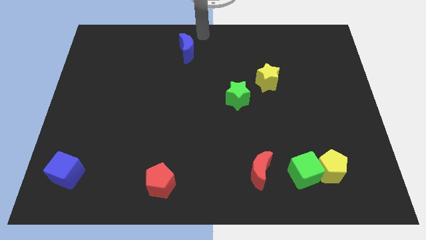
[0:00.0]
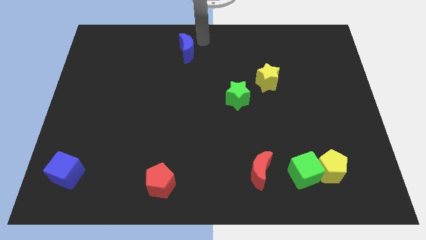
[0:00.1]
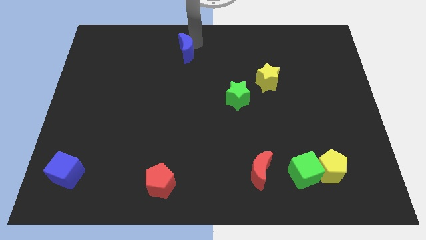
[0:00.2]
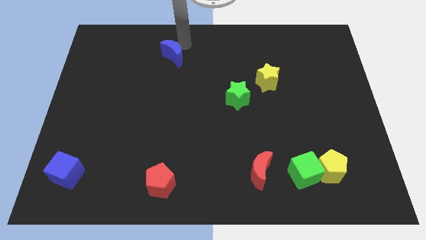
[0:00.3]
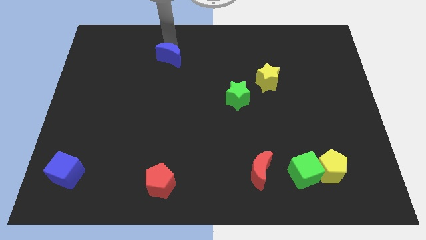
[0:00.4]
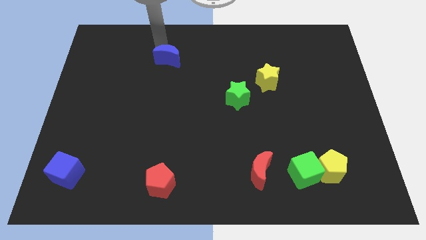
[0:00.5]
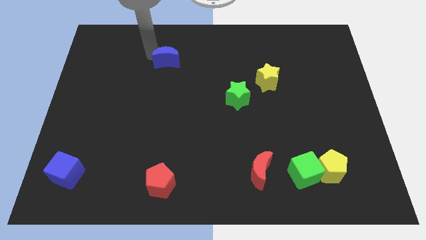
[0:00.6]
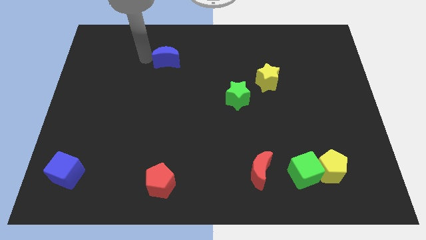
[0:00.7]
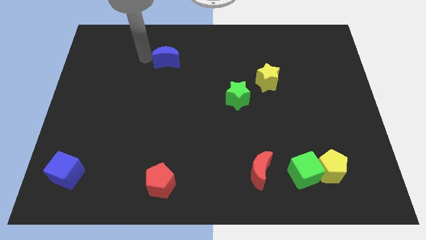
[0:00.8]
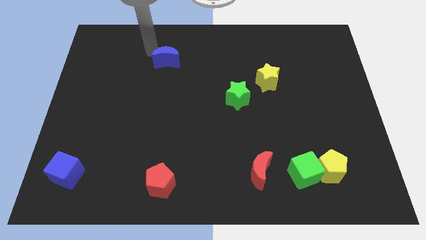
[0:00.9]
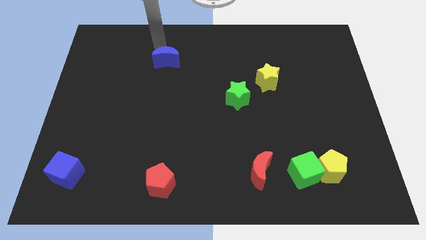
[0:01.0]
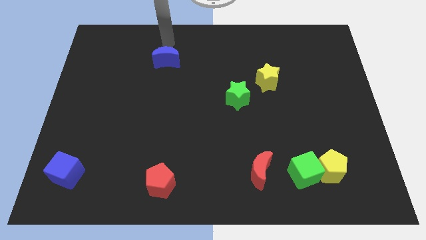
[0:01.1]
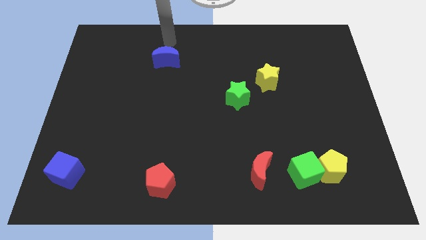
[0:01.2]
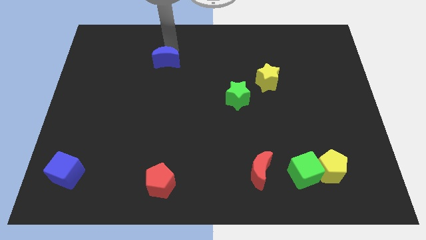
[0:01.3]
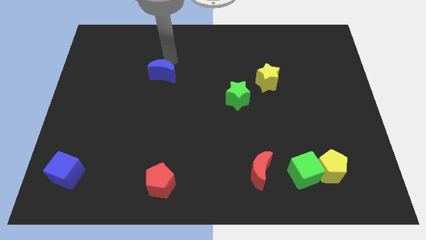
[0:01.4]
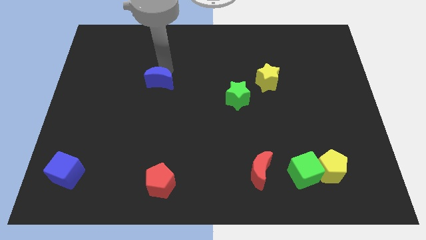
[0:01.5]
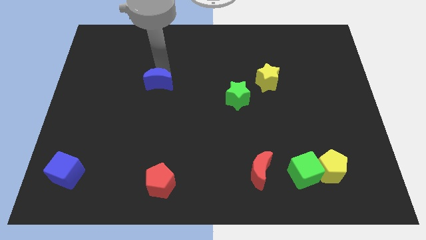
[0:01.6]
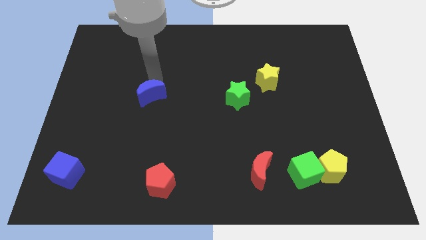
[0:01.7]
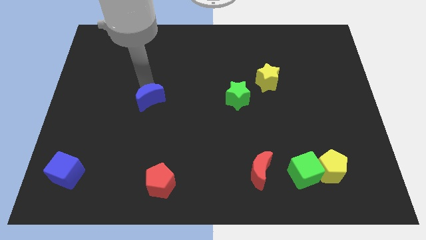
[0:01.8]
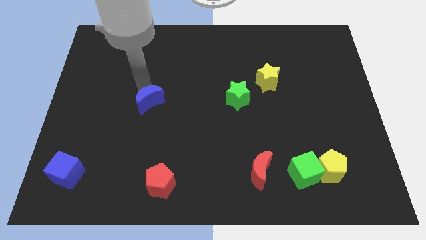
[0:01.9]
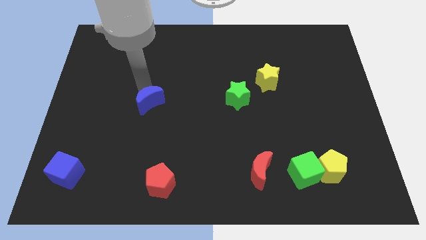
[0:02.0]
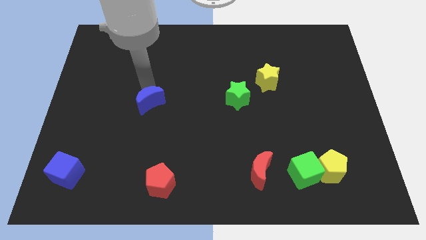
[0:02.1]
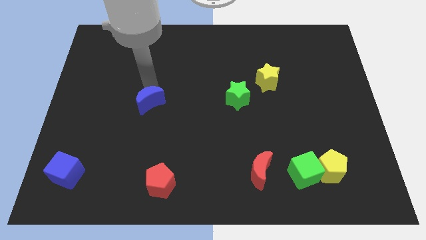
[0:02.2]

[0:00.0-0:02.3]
place the blue moon left to the green star

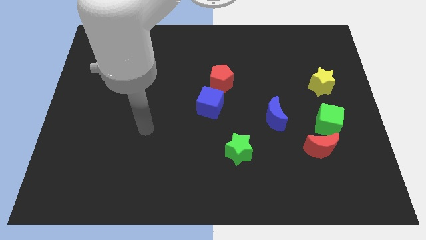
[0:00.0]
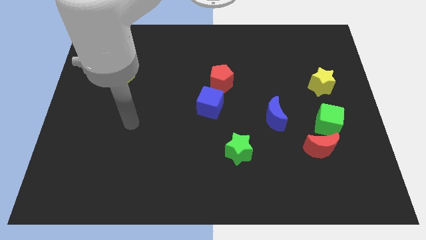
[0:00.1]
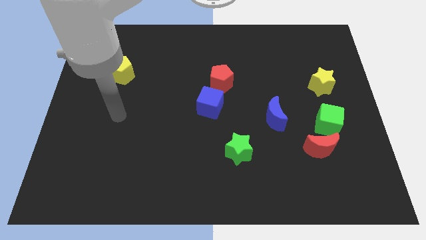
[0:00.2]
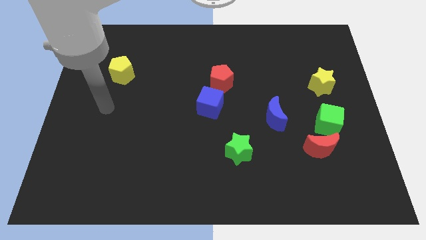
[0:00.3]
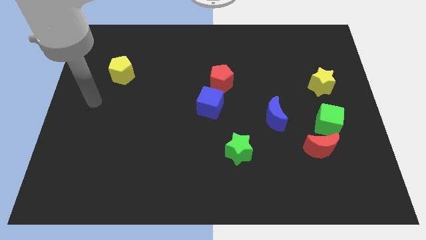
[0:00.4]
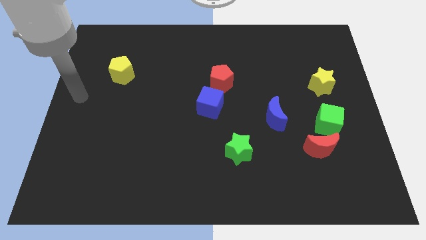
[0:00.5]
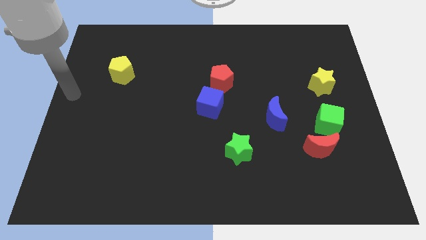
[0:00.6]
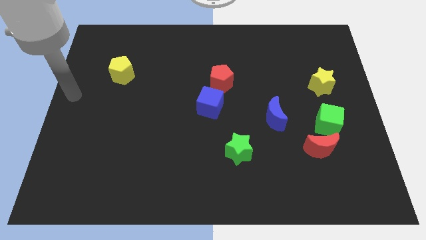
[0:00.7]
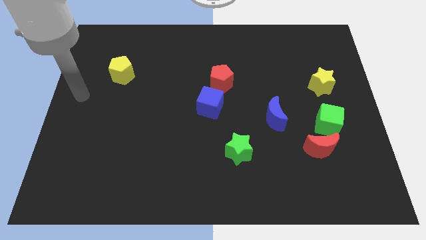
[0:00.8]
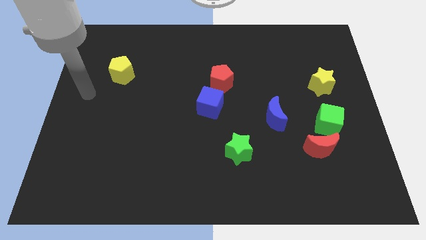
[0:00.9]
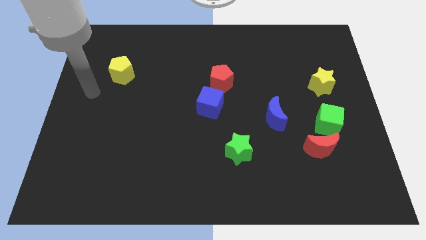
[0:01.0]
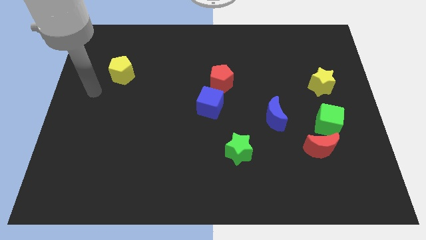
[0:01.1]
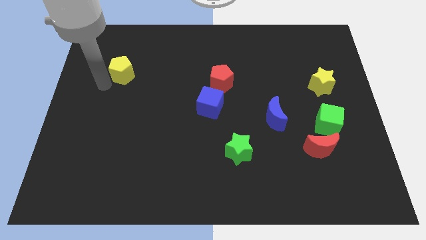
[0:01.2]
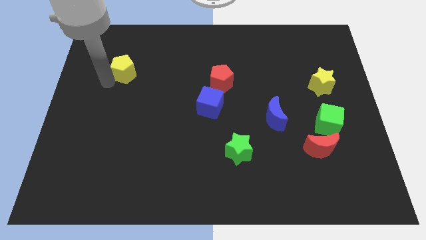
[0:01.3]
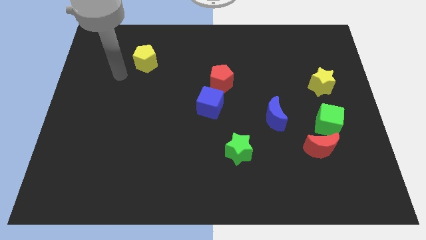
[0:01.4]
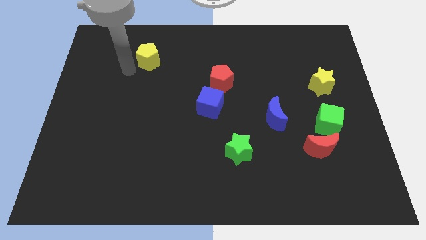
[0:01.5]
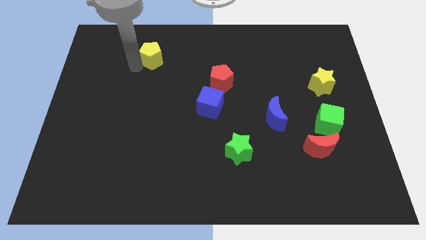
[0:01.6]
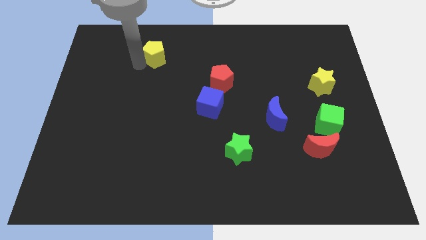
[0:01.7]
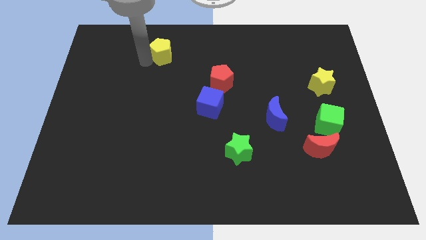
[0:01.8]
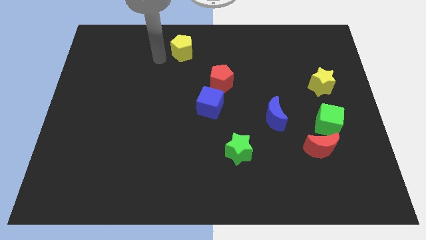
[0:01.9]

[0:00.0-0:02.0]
push the yellow pentagon towards the top center

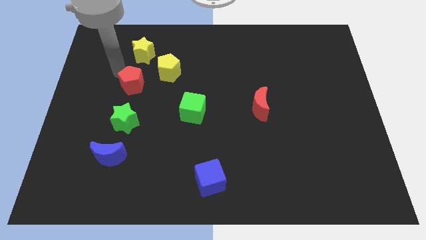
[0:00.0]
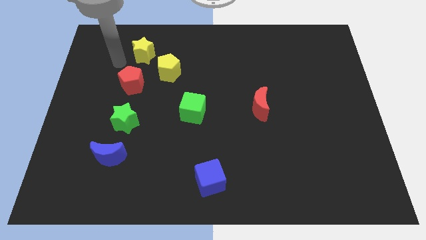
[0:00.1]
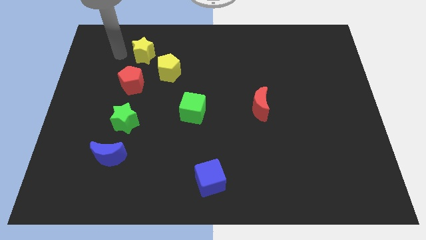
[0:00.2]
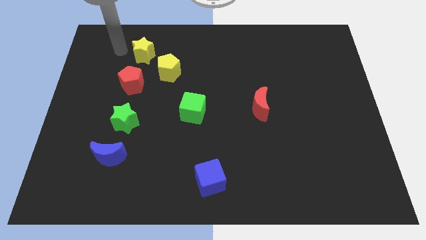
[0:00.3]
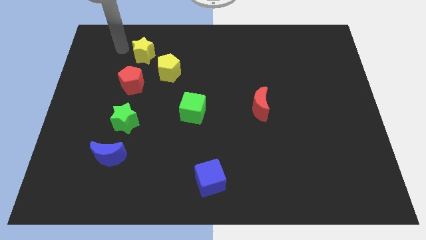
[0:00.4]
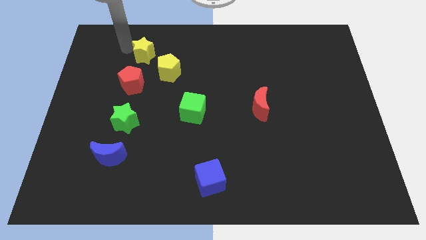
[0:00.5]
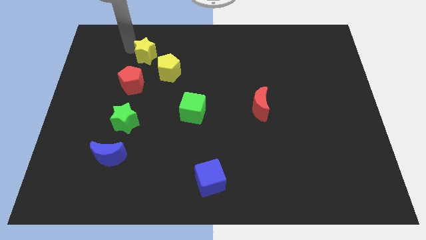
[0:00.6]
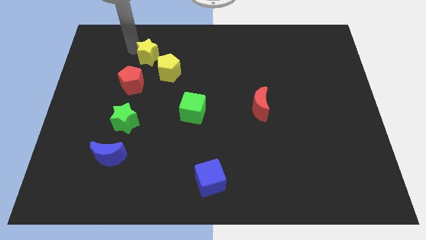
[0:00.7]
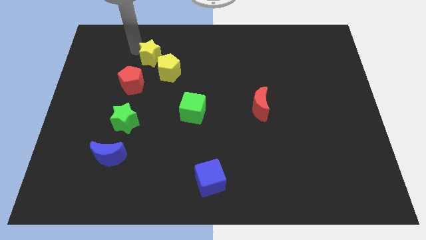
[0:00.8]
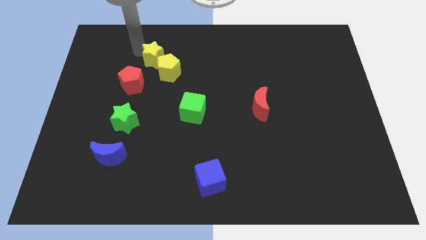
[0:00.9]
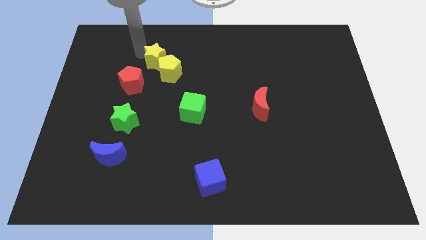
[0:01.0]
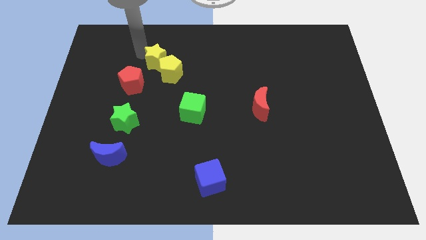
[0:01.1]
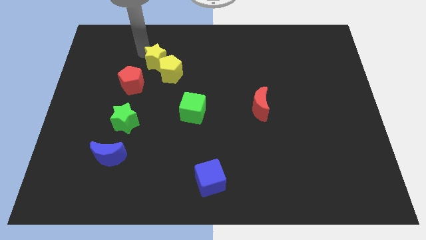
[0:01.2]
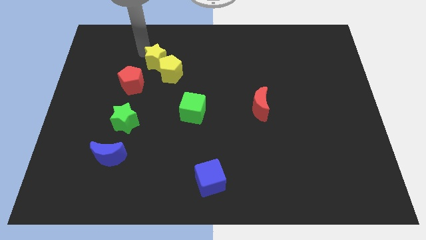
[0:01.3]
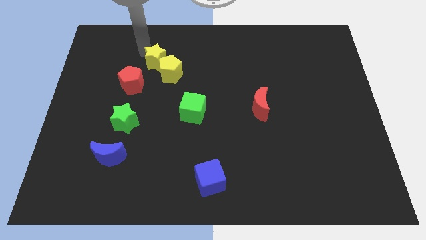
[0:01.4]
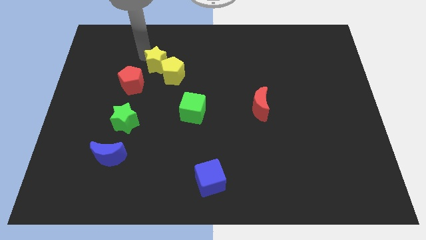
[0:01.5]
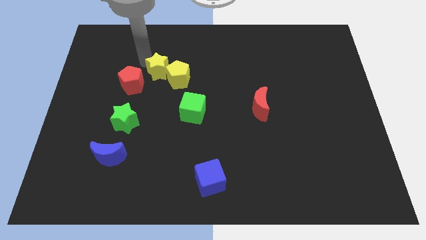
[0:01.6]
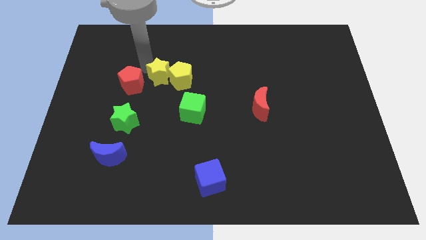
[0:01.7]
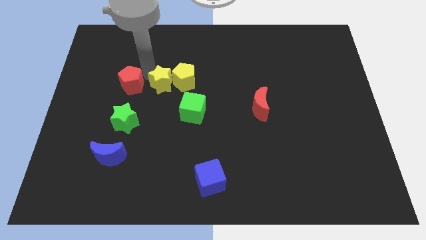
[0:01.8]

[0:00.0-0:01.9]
push the yellow star into yellow pentagon

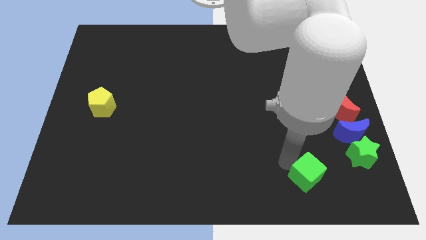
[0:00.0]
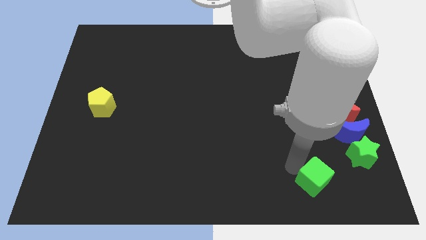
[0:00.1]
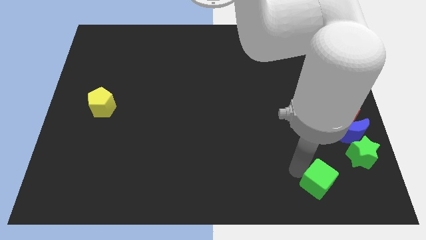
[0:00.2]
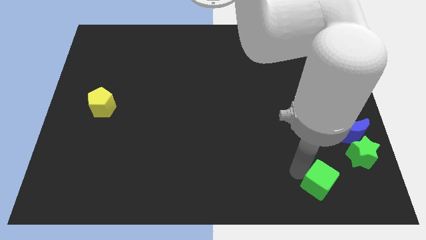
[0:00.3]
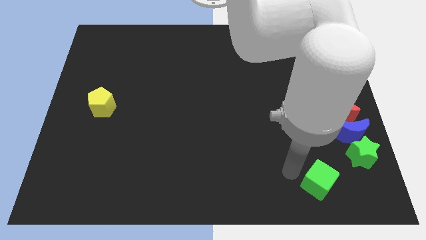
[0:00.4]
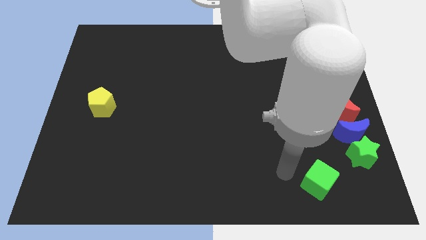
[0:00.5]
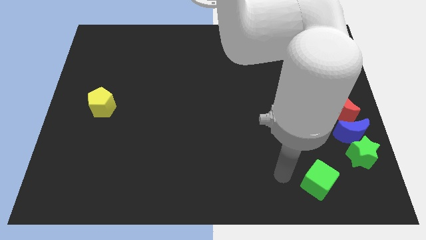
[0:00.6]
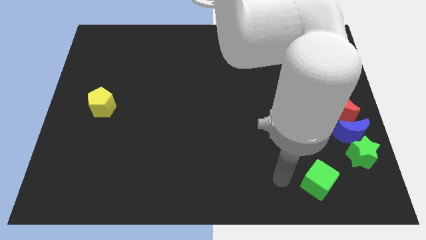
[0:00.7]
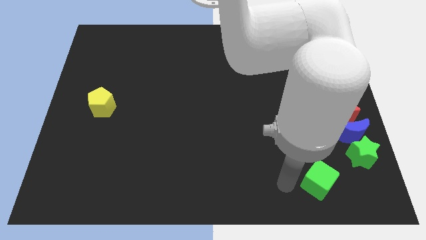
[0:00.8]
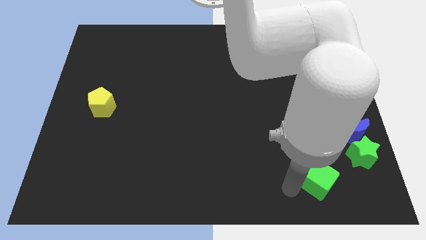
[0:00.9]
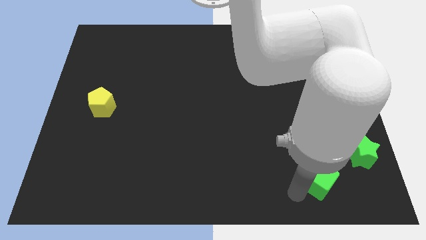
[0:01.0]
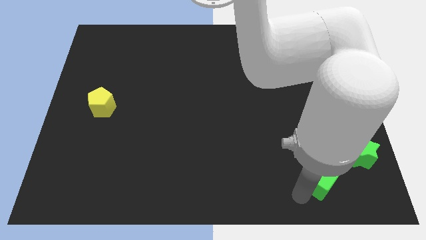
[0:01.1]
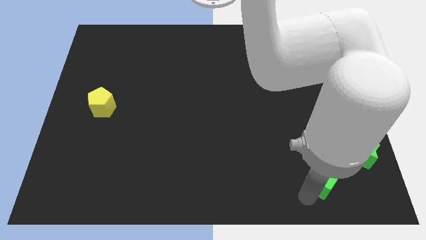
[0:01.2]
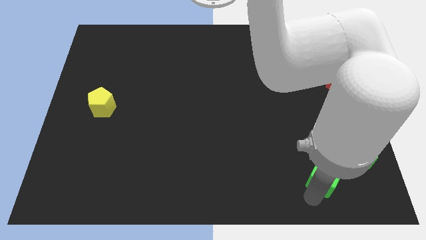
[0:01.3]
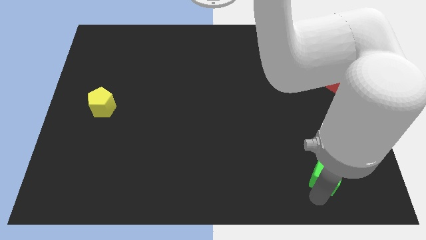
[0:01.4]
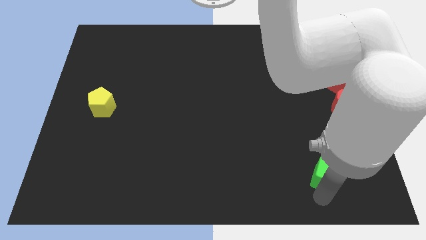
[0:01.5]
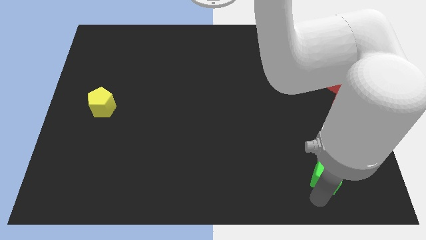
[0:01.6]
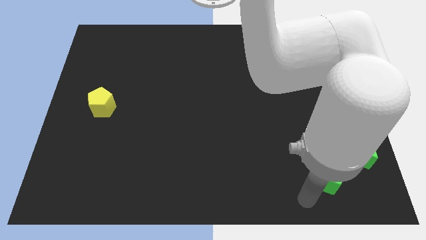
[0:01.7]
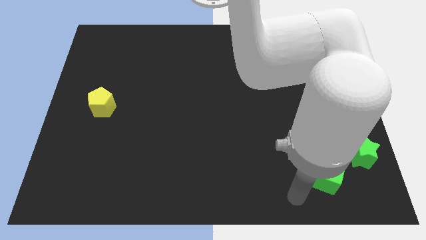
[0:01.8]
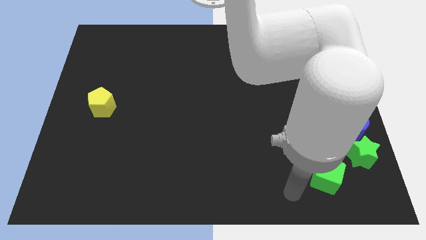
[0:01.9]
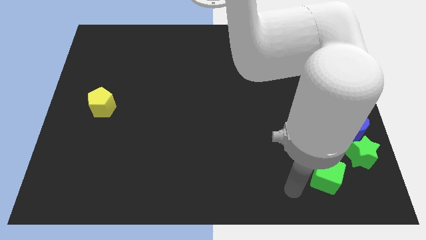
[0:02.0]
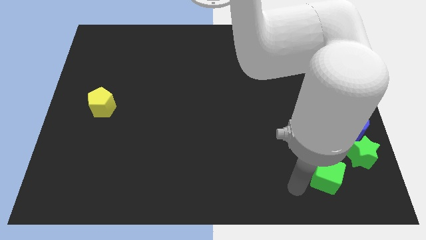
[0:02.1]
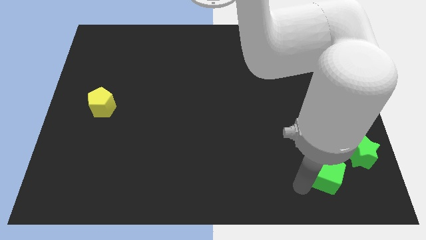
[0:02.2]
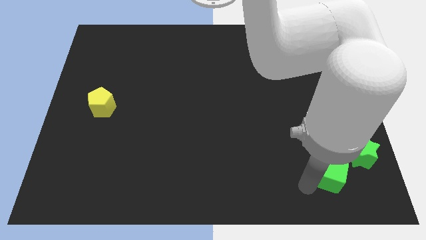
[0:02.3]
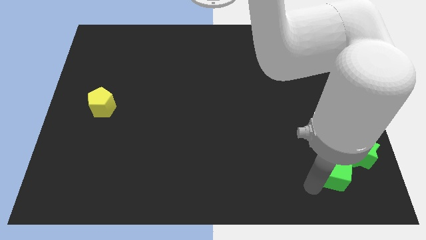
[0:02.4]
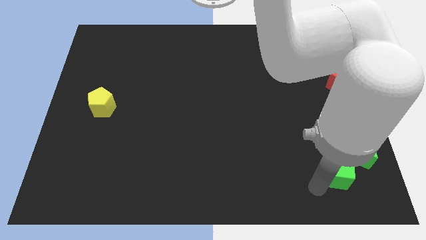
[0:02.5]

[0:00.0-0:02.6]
move the green cube to the bottom left to the green star

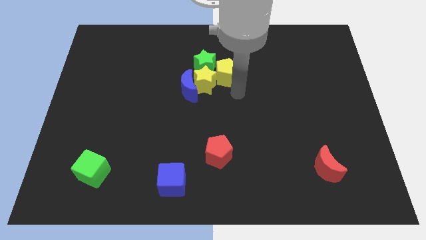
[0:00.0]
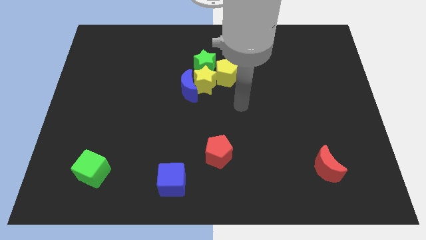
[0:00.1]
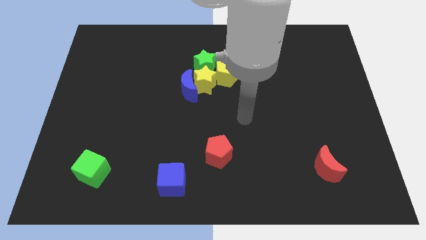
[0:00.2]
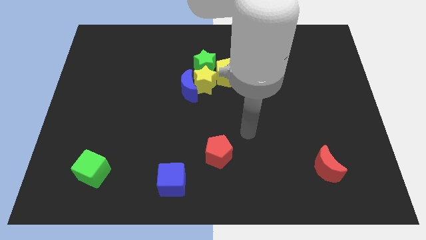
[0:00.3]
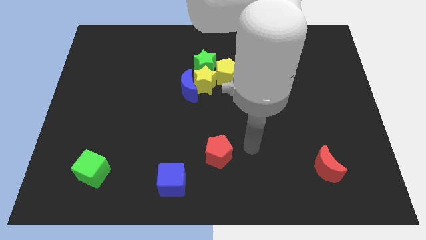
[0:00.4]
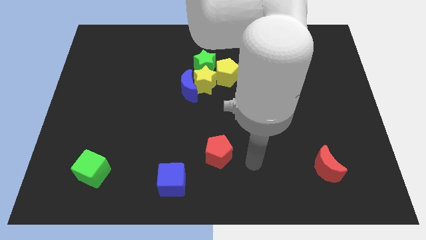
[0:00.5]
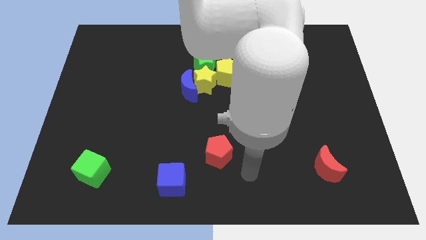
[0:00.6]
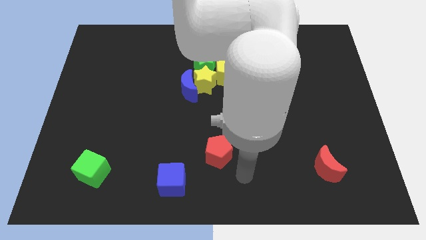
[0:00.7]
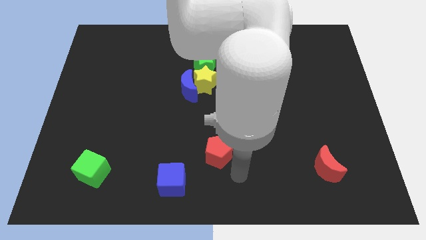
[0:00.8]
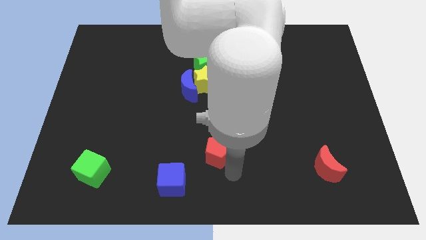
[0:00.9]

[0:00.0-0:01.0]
point your arm at the bottom right side of red pentagon
